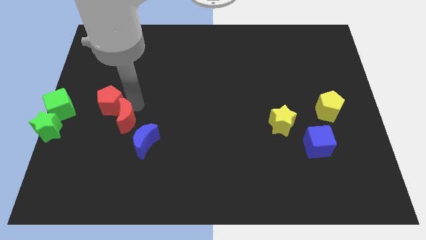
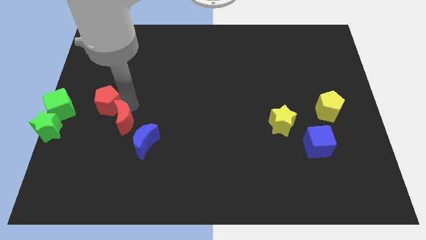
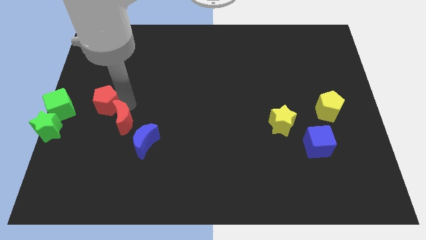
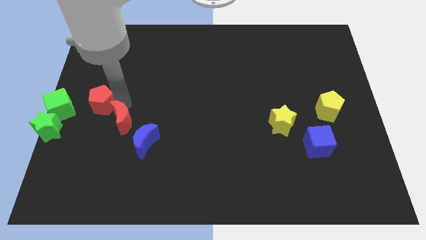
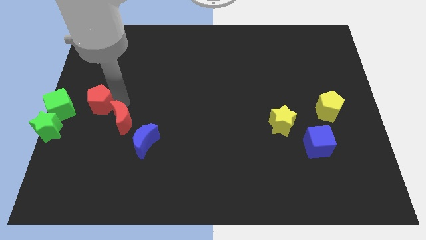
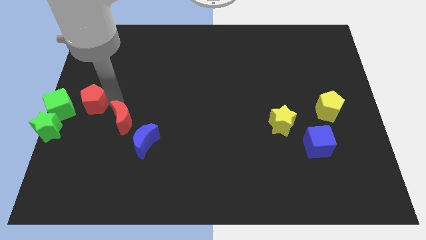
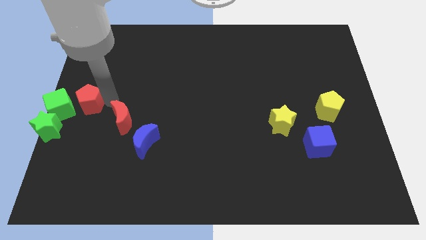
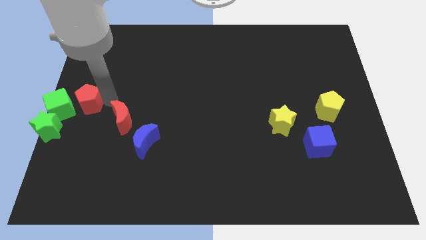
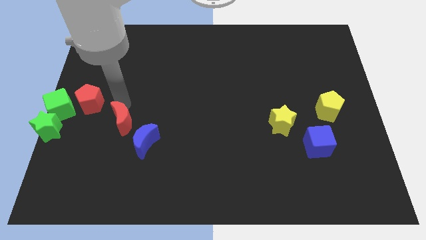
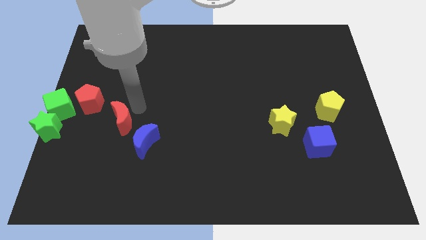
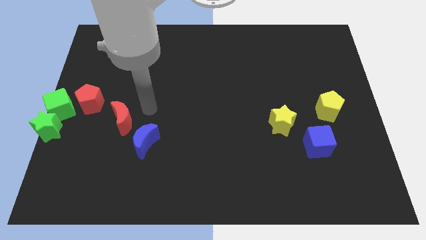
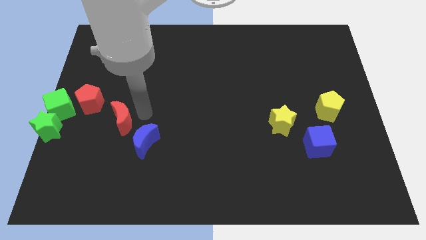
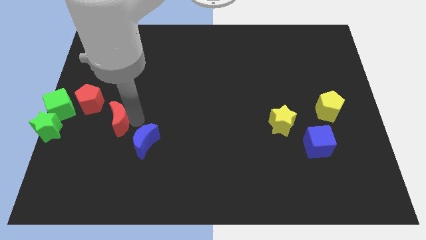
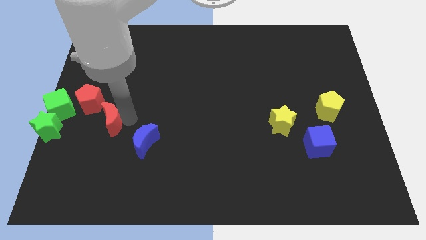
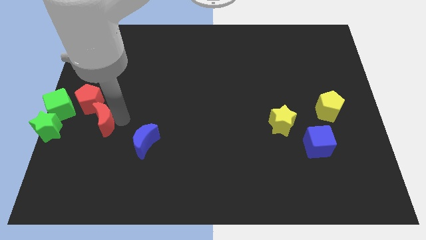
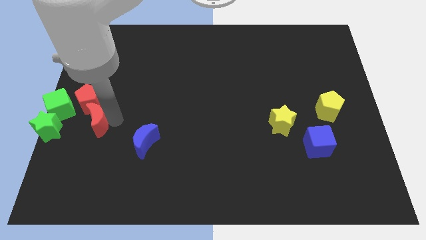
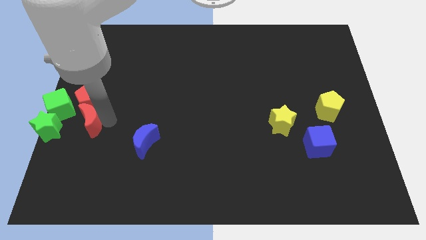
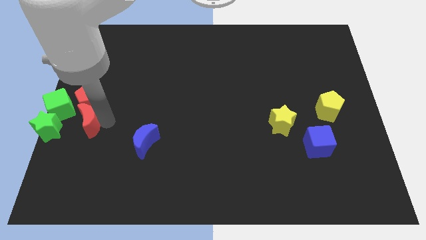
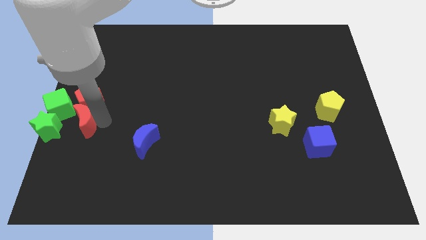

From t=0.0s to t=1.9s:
move the red crescent to the bottom of red pentagon

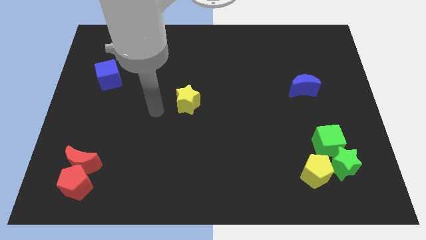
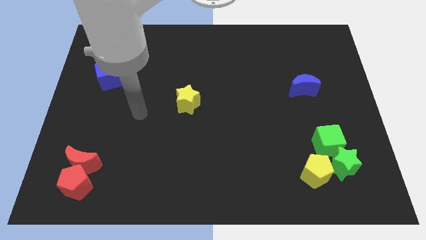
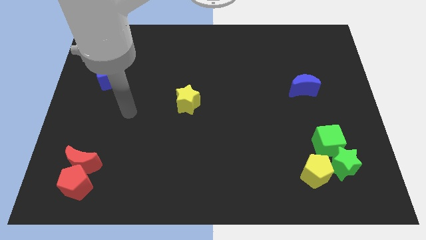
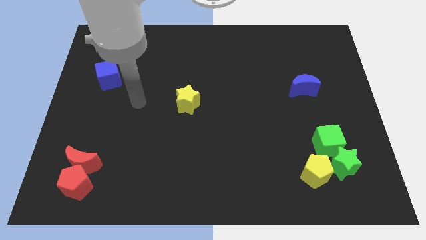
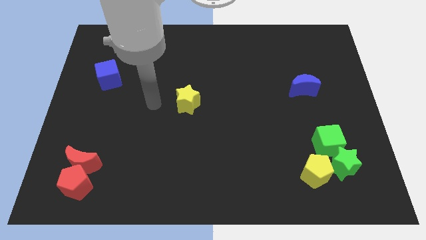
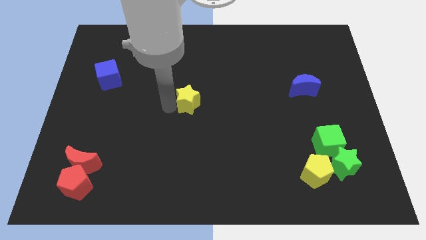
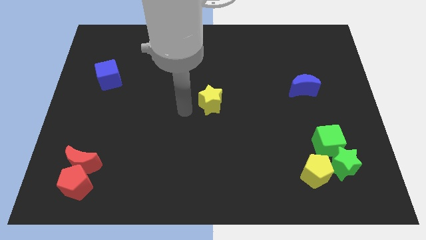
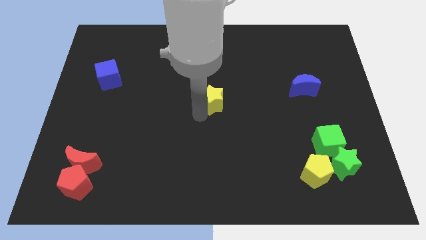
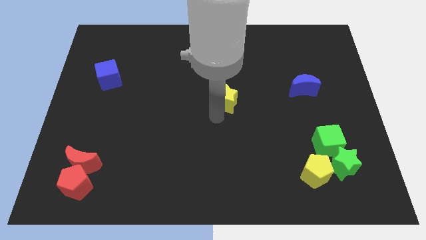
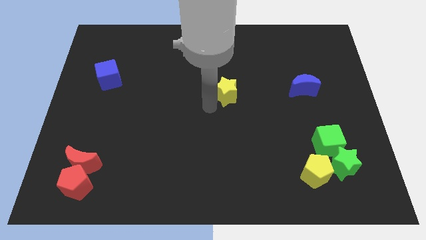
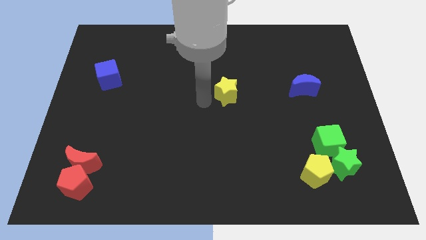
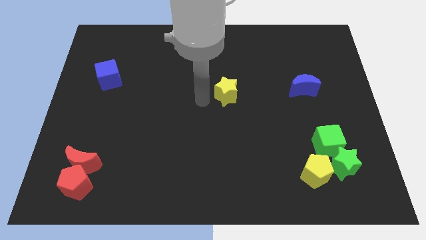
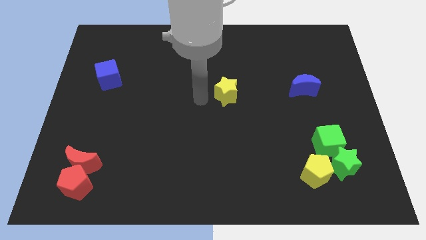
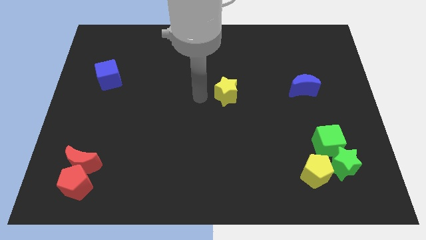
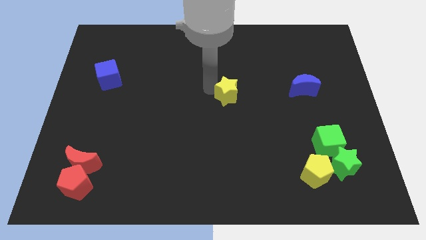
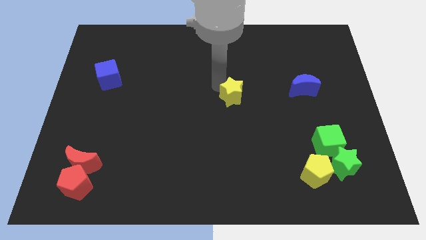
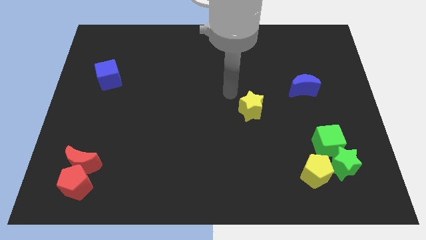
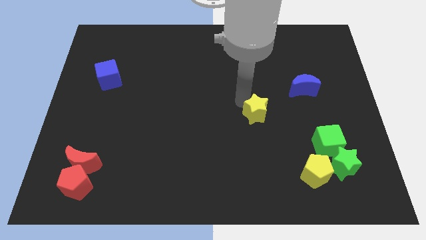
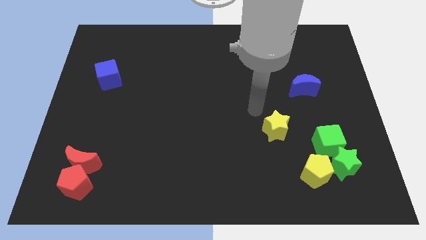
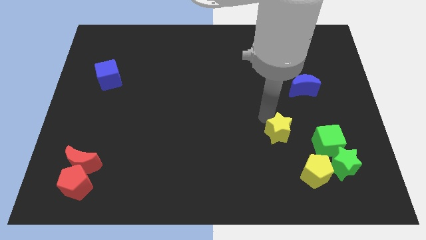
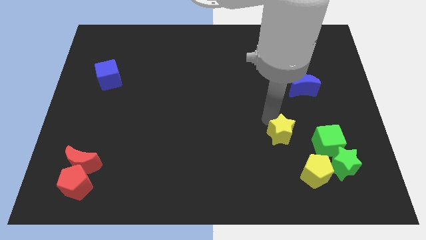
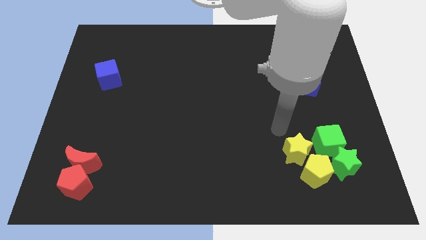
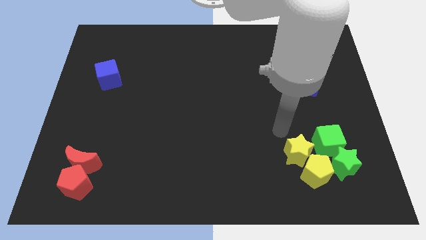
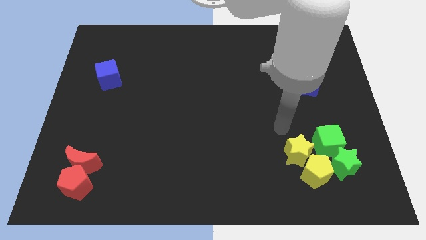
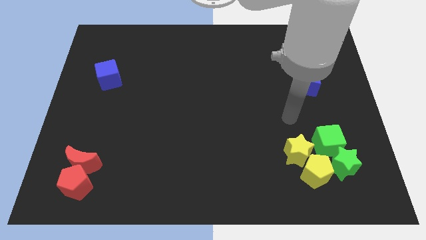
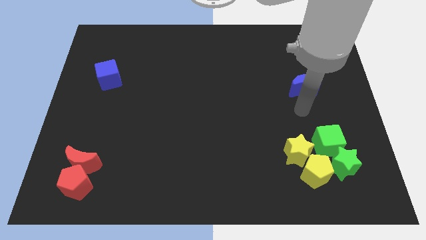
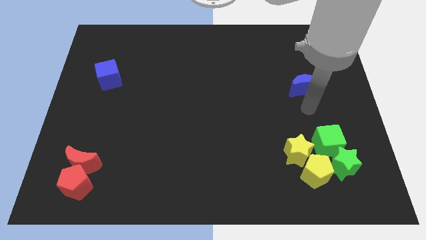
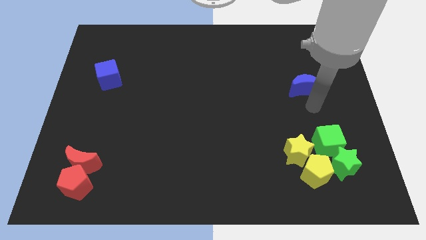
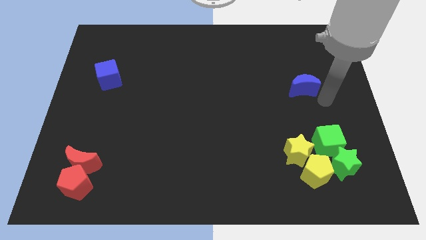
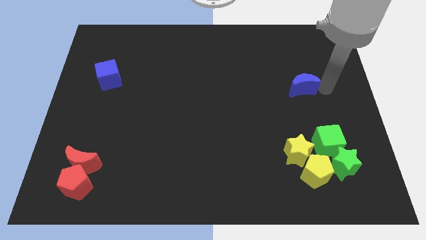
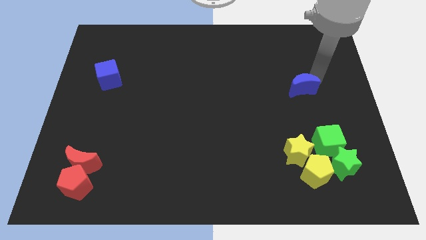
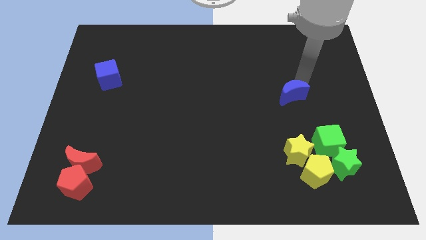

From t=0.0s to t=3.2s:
push the yellow star to the top of yellow pentagon

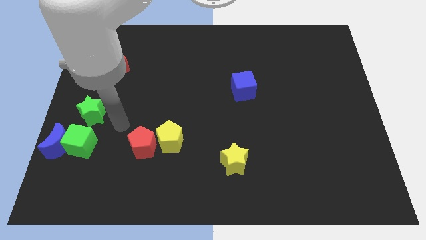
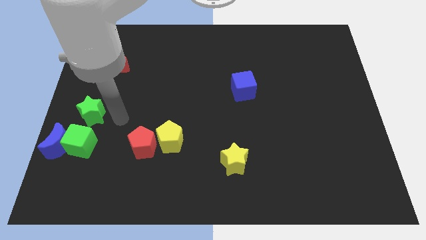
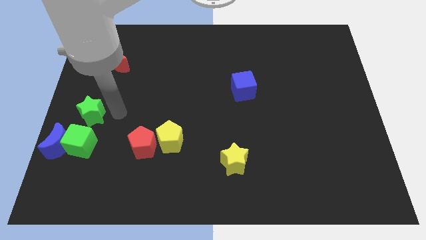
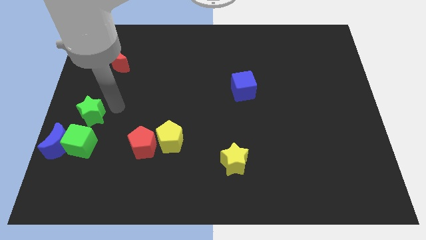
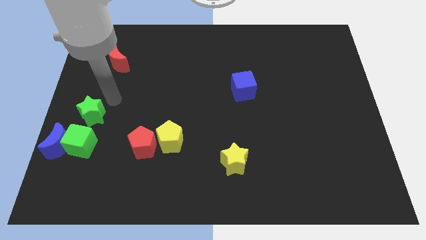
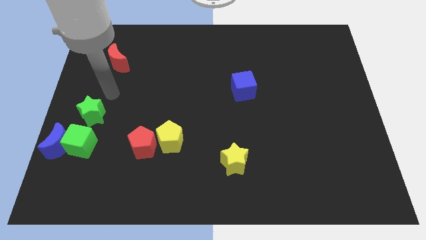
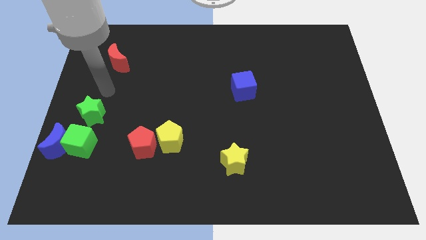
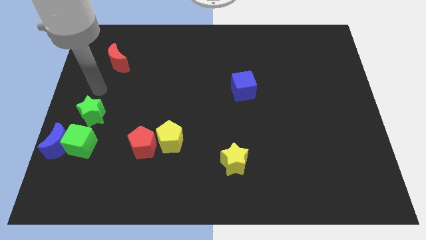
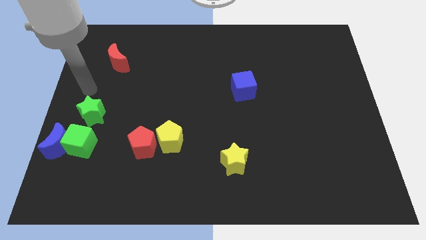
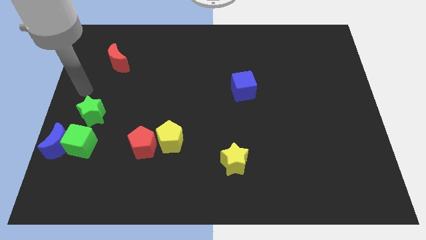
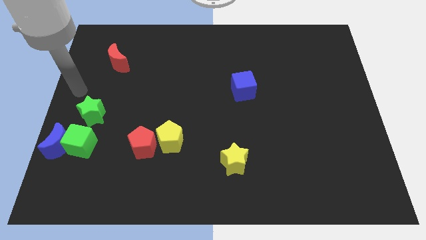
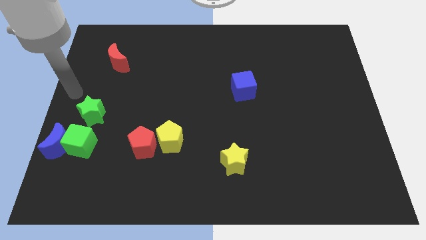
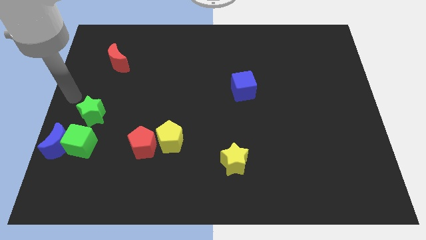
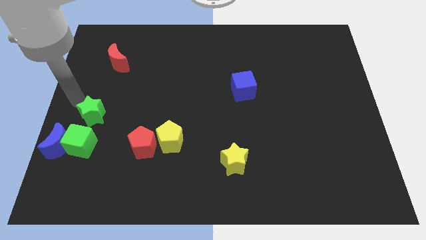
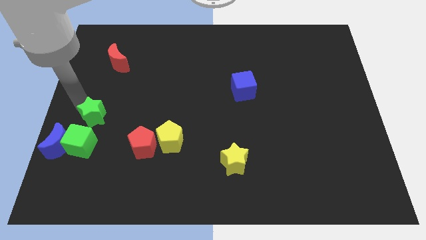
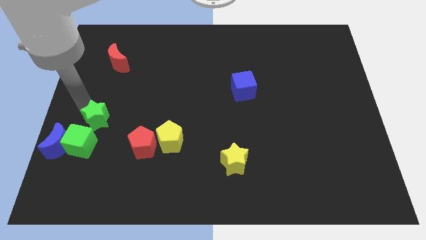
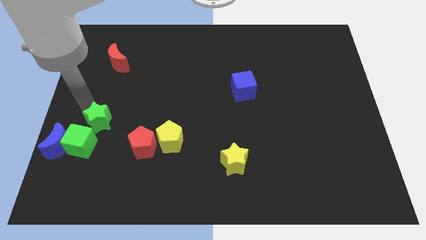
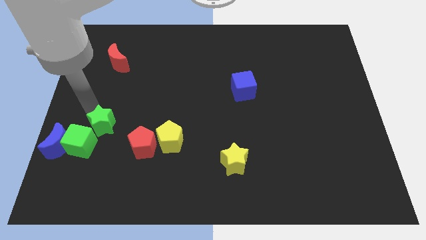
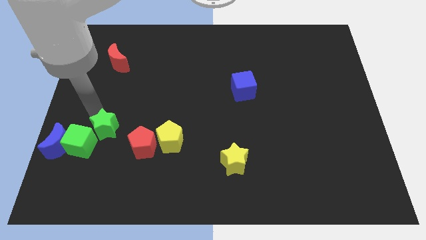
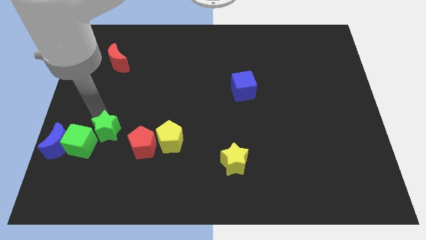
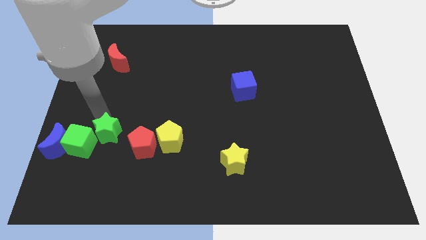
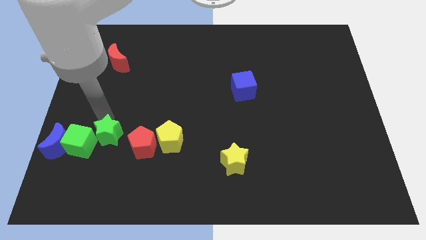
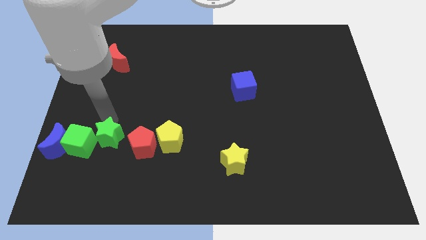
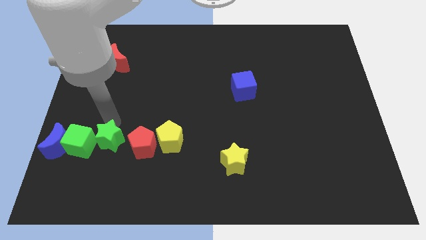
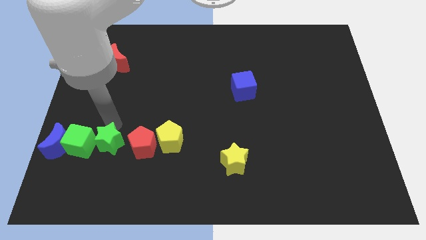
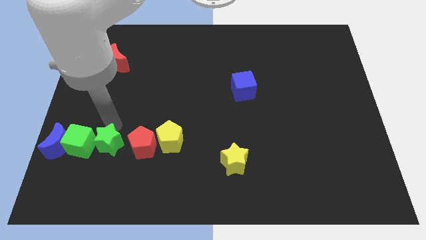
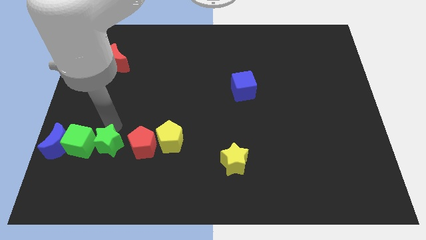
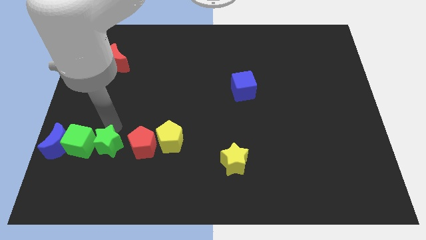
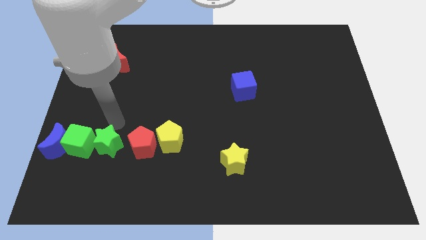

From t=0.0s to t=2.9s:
place the green star in between the red pentagon and green cube

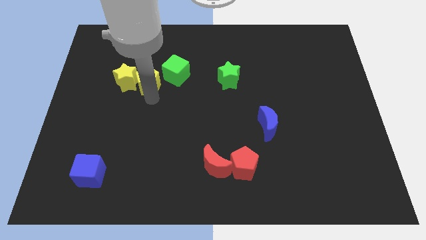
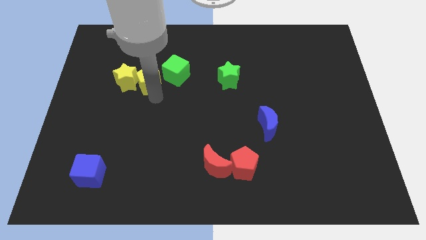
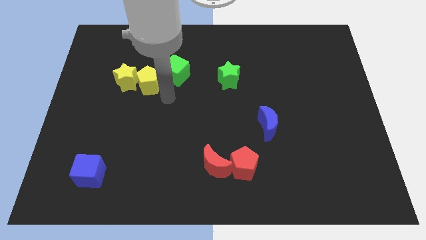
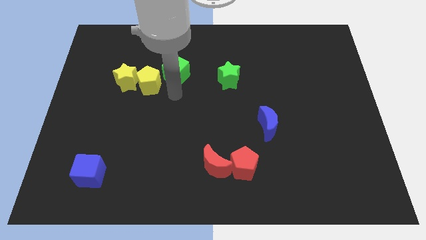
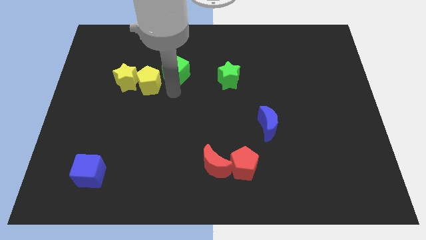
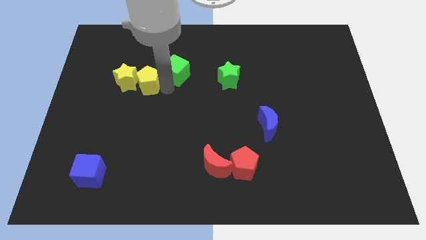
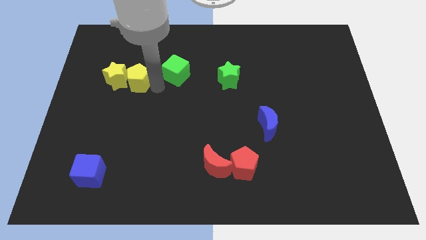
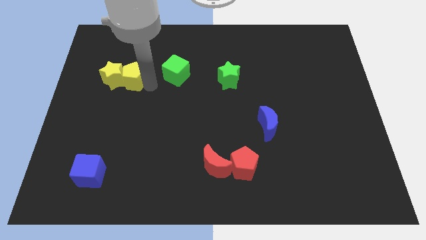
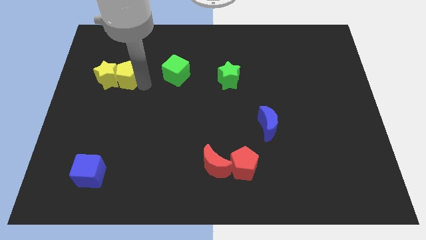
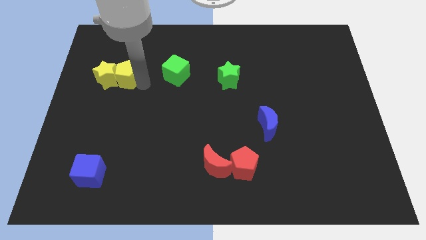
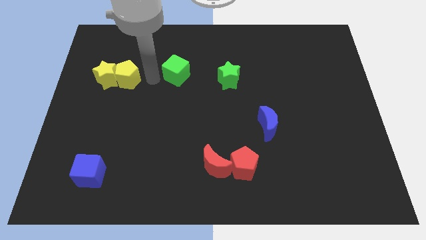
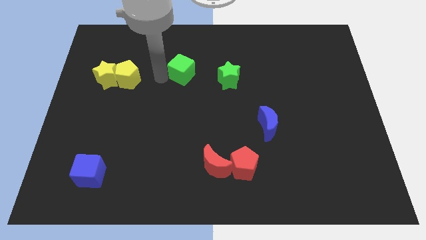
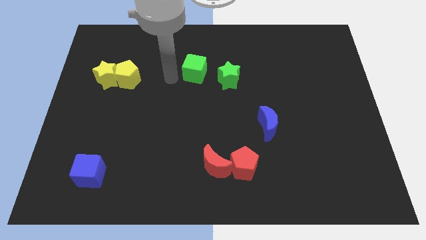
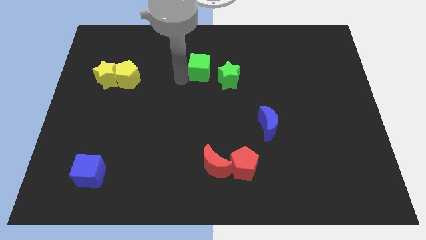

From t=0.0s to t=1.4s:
push two yellow blocks to the left
